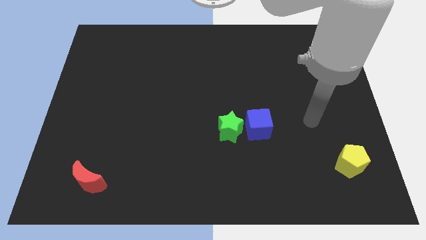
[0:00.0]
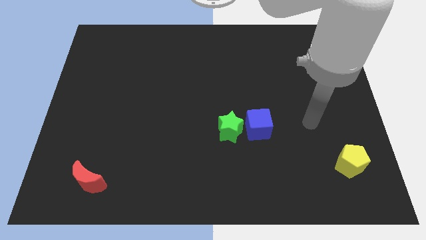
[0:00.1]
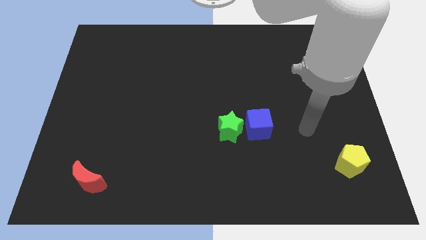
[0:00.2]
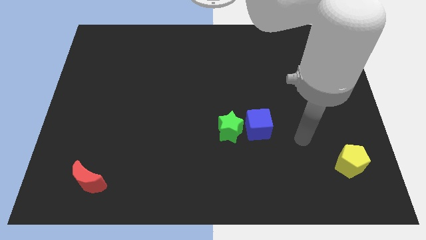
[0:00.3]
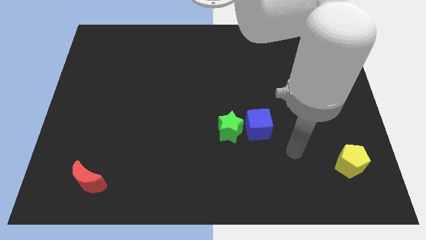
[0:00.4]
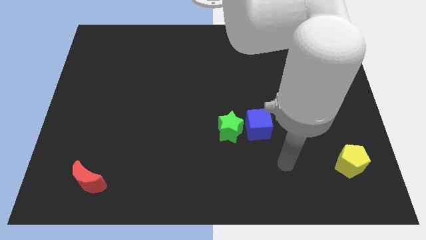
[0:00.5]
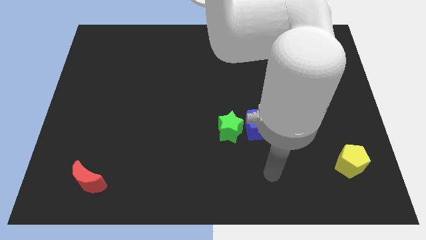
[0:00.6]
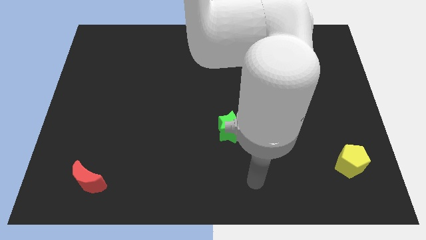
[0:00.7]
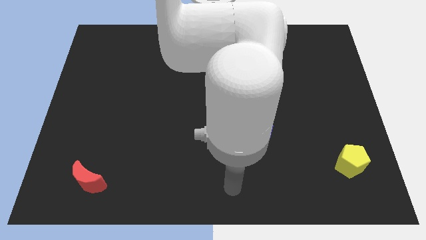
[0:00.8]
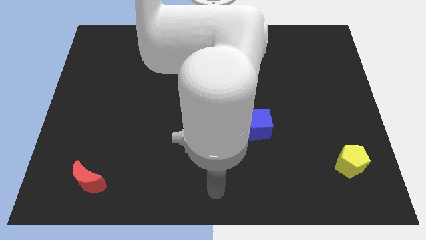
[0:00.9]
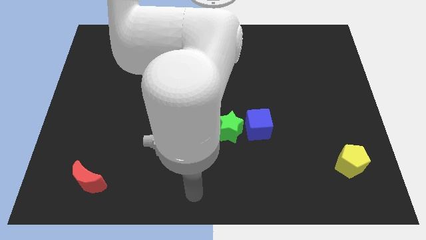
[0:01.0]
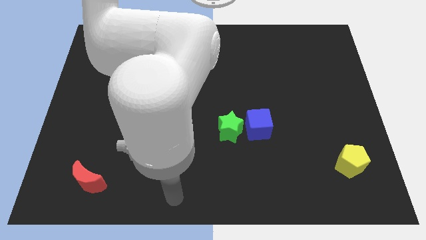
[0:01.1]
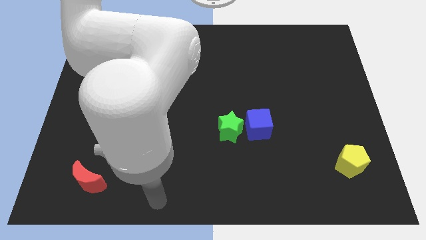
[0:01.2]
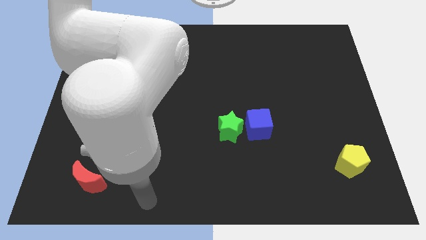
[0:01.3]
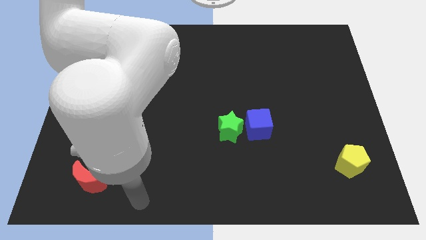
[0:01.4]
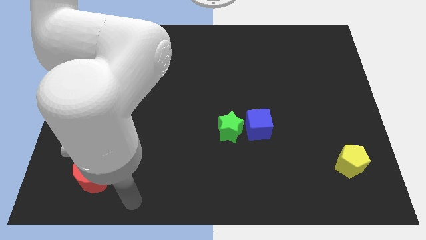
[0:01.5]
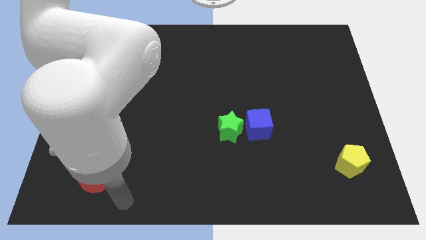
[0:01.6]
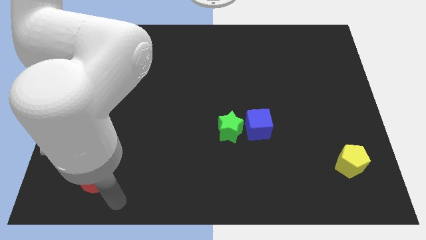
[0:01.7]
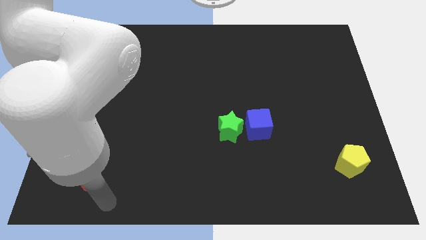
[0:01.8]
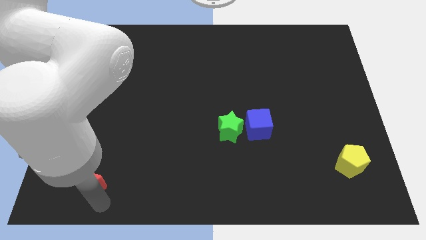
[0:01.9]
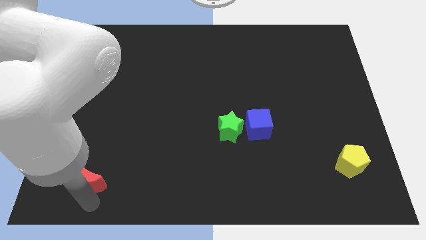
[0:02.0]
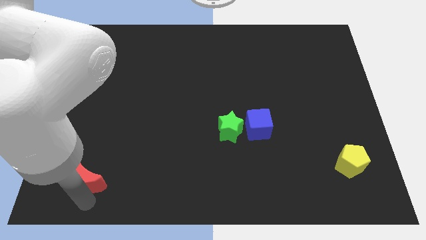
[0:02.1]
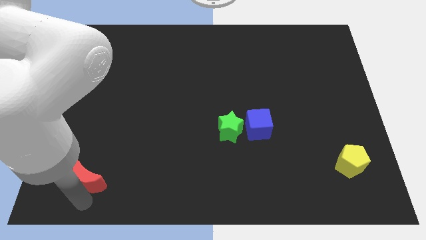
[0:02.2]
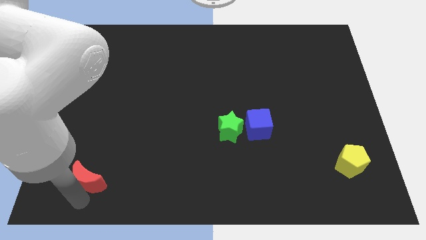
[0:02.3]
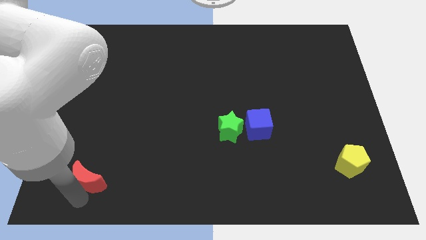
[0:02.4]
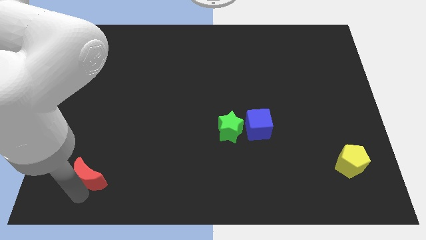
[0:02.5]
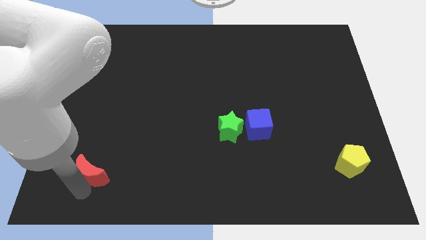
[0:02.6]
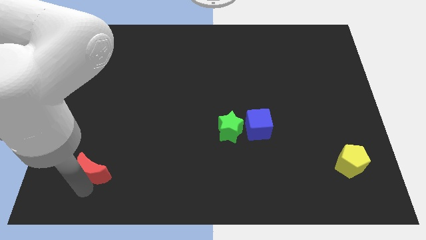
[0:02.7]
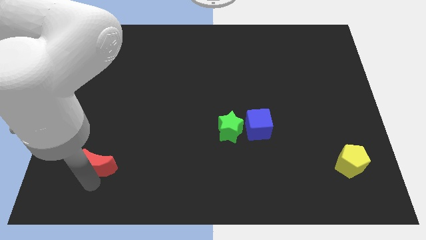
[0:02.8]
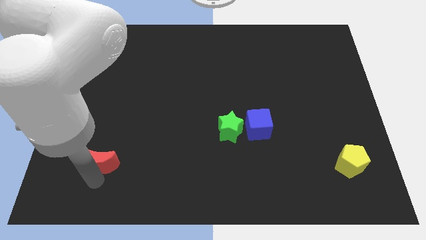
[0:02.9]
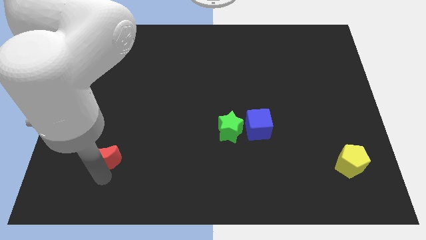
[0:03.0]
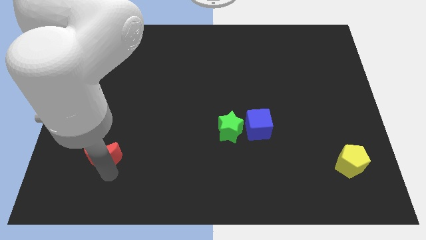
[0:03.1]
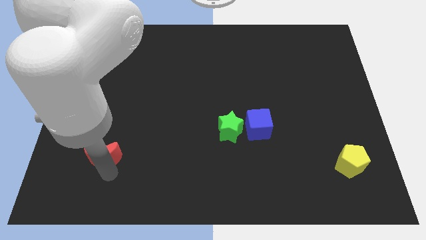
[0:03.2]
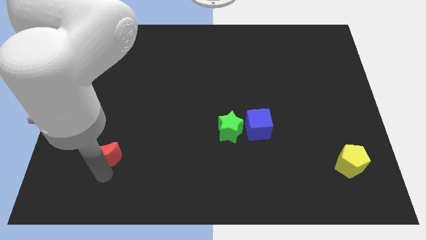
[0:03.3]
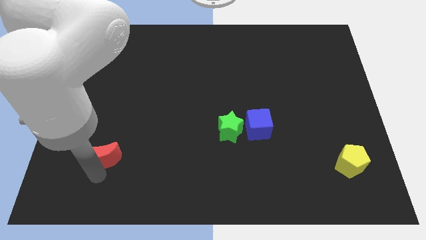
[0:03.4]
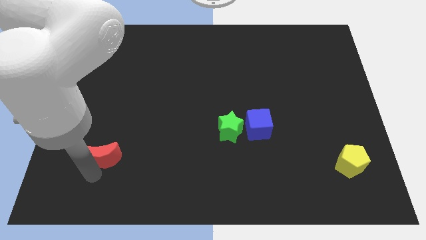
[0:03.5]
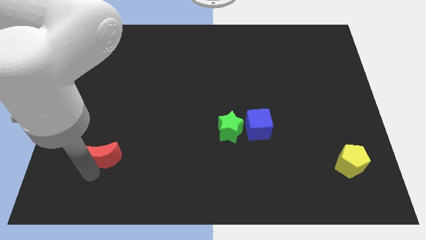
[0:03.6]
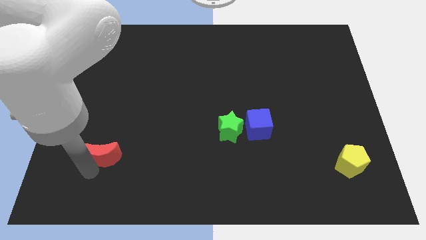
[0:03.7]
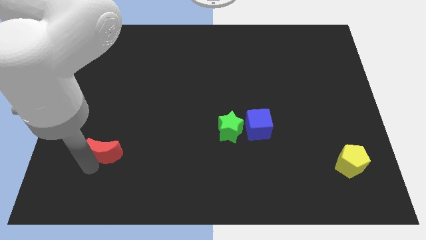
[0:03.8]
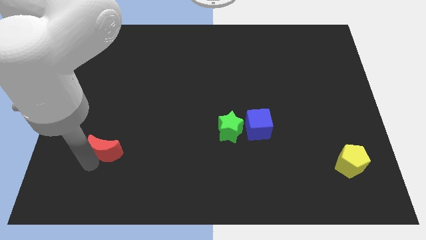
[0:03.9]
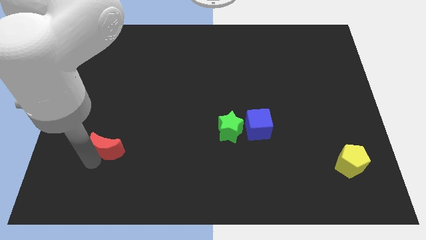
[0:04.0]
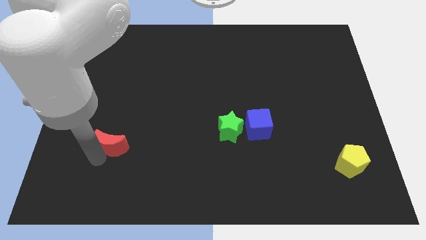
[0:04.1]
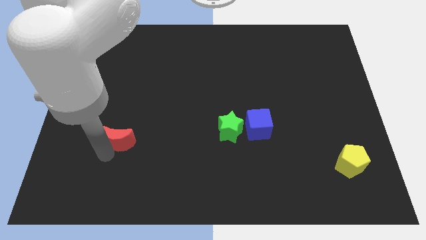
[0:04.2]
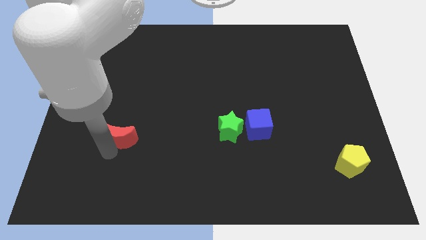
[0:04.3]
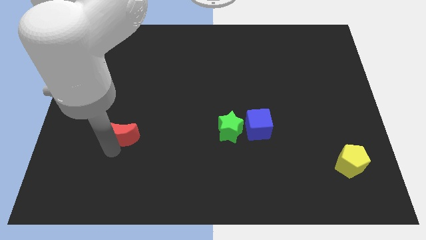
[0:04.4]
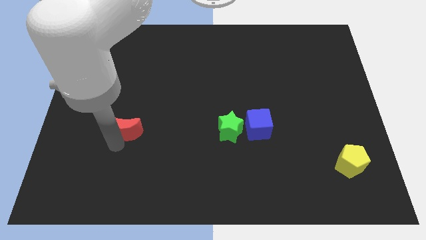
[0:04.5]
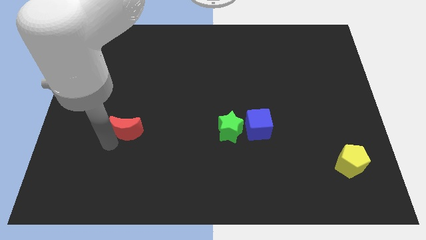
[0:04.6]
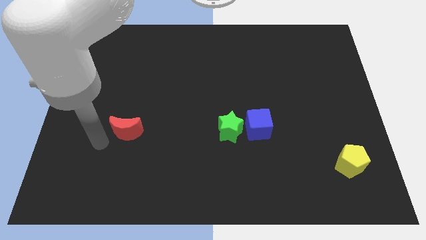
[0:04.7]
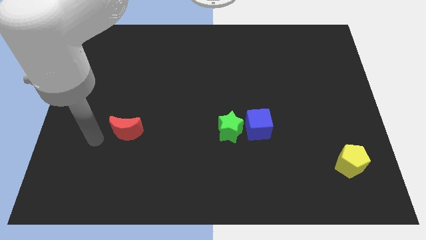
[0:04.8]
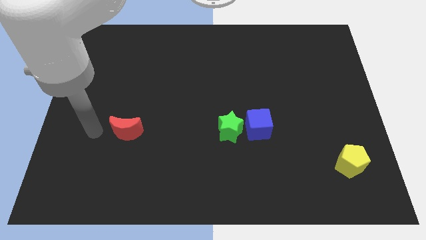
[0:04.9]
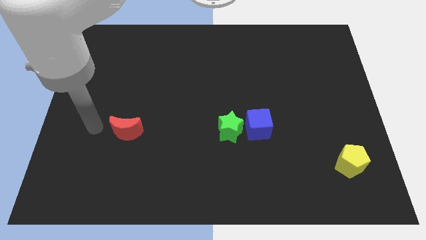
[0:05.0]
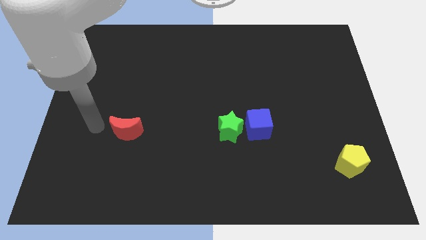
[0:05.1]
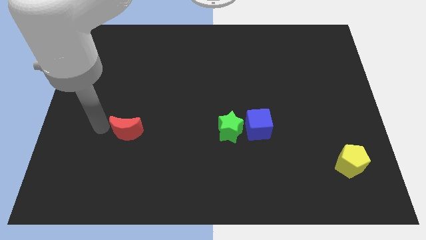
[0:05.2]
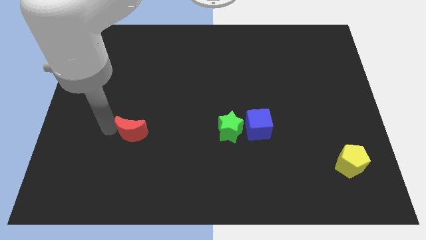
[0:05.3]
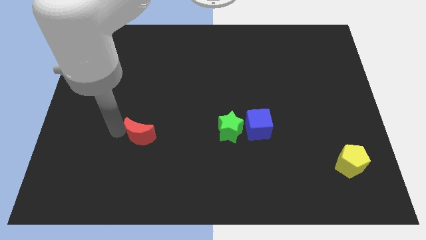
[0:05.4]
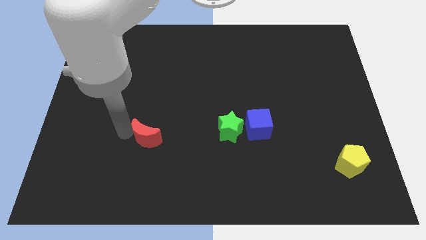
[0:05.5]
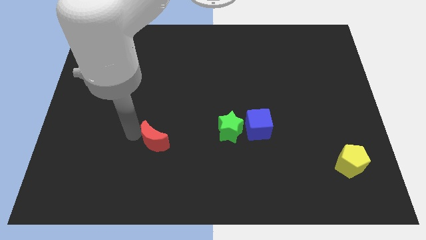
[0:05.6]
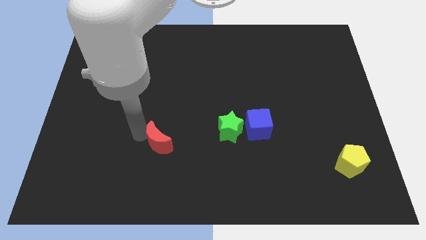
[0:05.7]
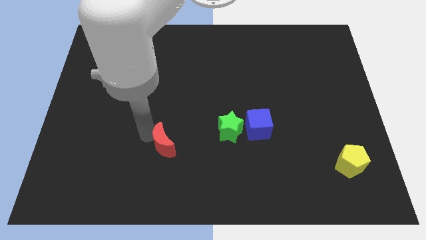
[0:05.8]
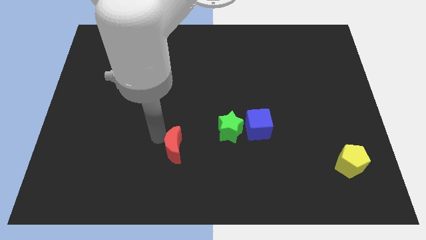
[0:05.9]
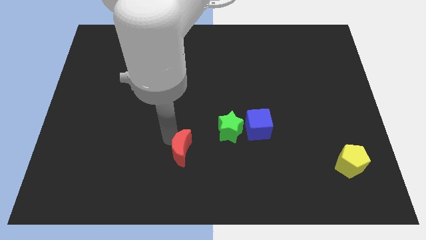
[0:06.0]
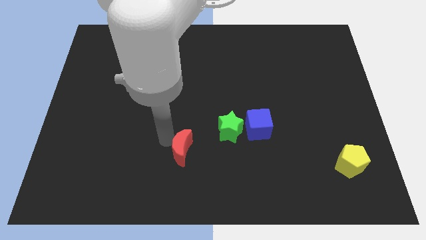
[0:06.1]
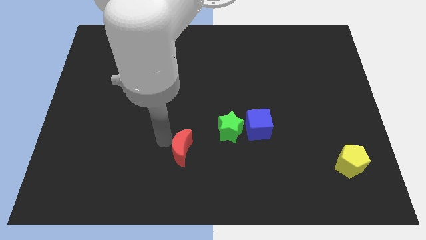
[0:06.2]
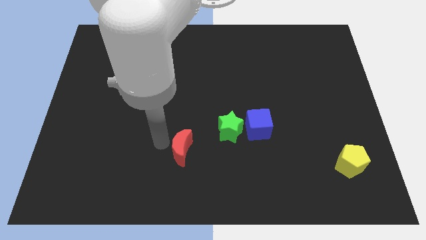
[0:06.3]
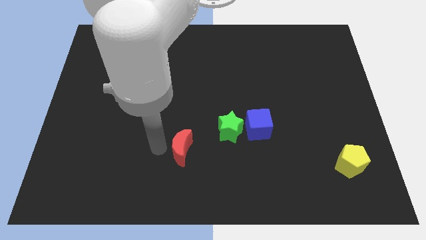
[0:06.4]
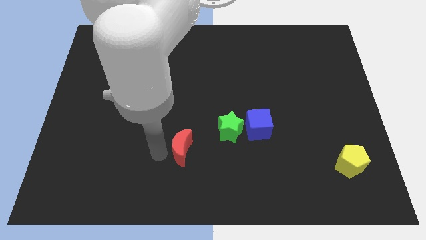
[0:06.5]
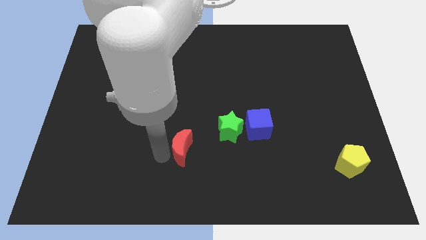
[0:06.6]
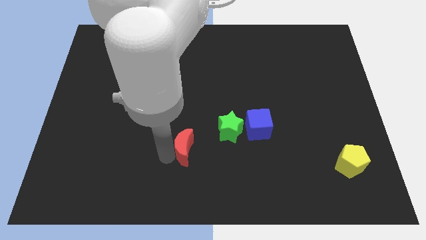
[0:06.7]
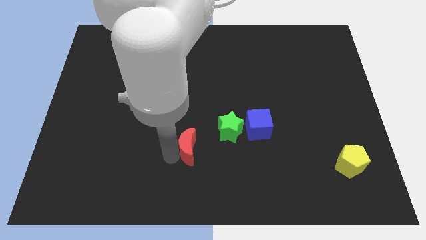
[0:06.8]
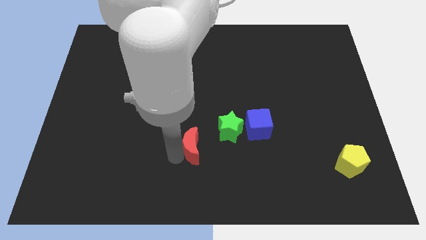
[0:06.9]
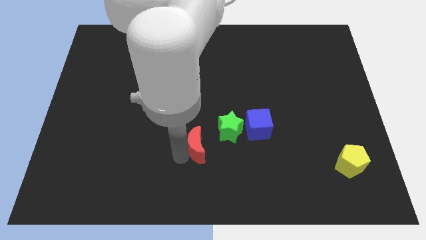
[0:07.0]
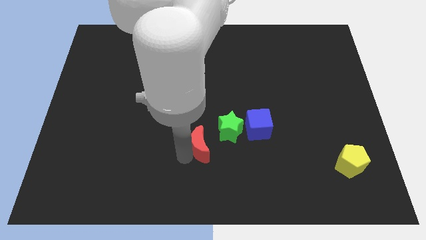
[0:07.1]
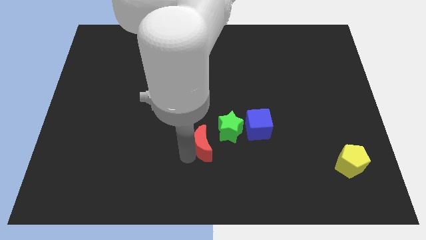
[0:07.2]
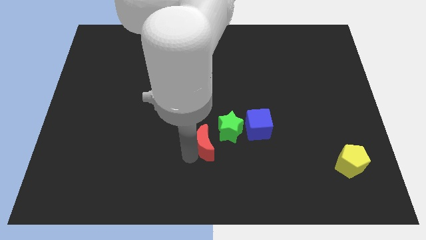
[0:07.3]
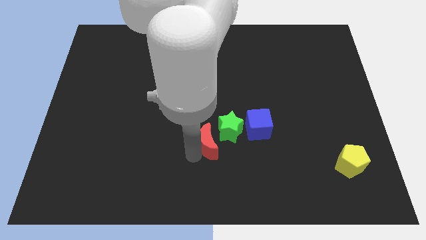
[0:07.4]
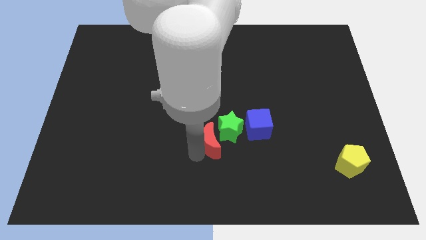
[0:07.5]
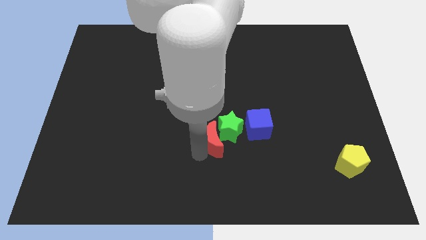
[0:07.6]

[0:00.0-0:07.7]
slide the red moon towards the star

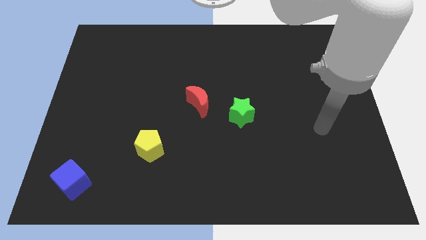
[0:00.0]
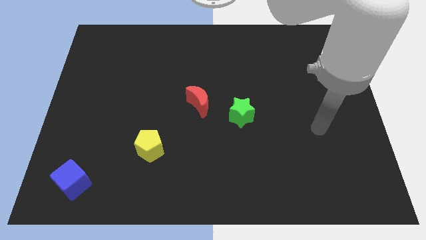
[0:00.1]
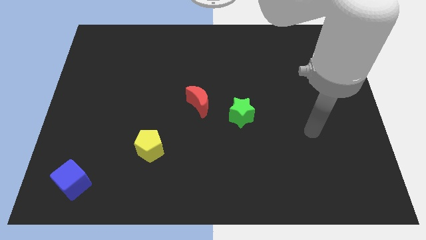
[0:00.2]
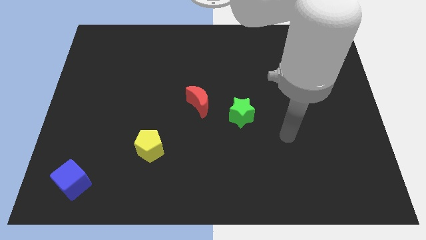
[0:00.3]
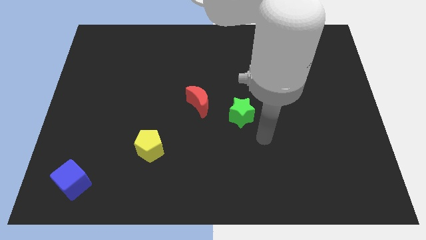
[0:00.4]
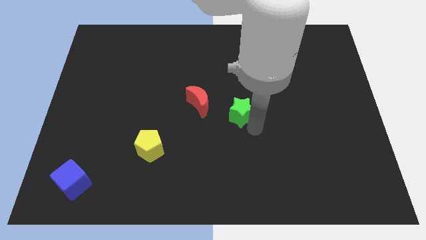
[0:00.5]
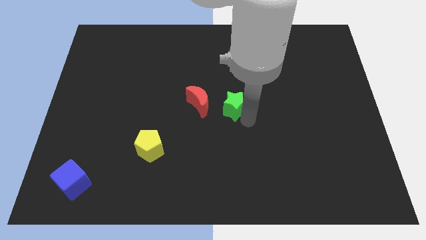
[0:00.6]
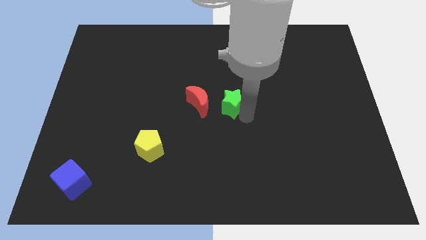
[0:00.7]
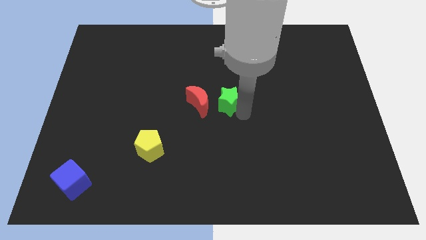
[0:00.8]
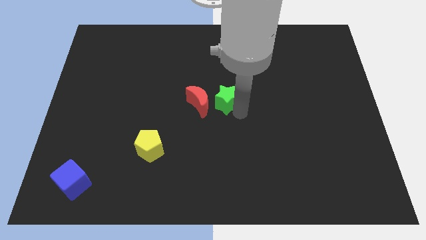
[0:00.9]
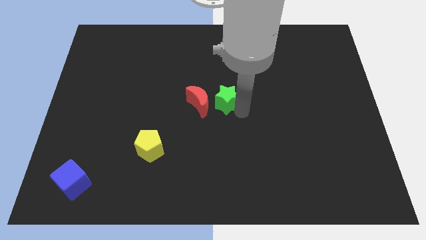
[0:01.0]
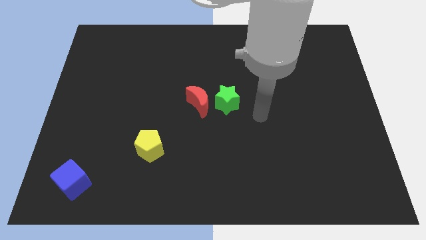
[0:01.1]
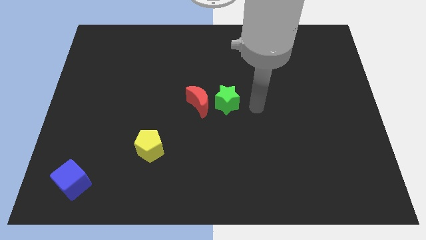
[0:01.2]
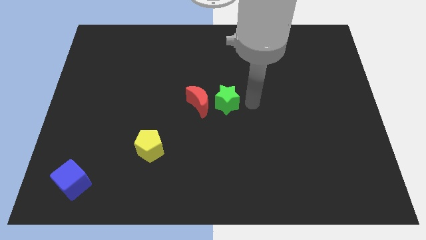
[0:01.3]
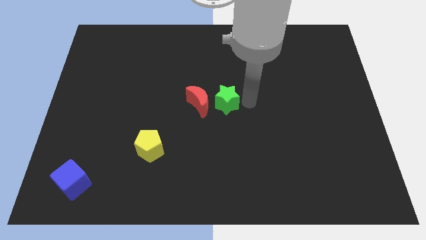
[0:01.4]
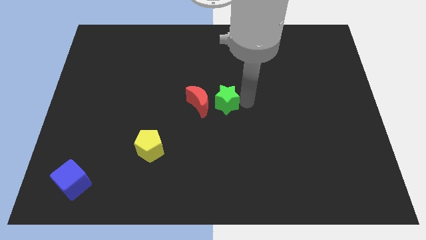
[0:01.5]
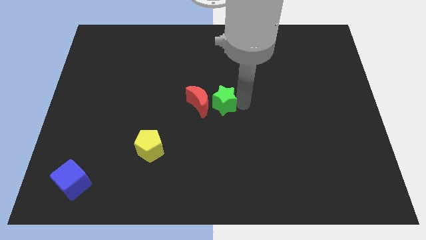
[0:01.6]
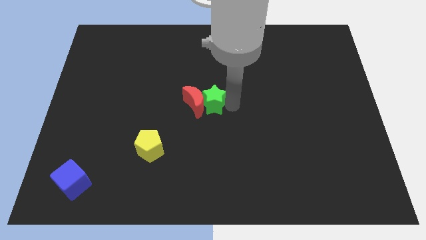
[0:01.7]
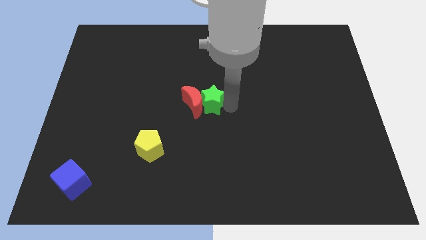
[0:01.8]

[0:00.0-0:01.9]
put the green block towards the moon
